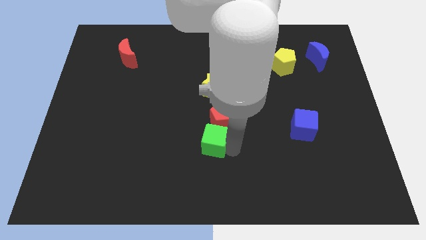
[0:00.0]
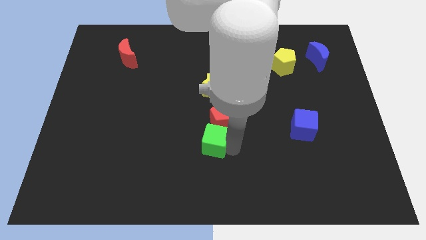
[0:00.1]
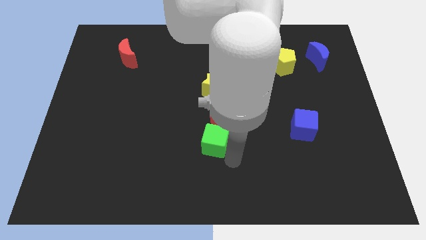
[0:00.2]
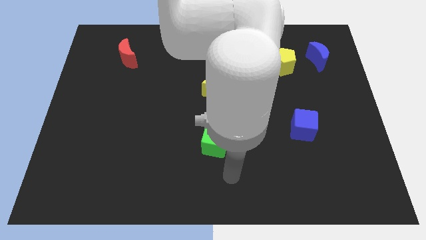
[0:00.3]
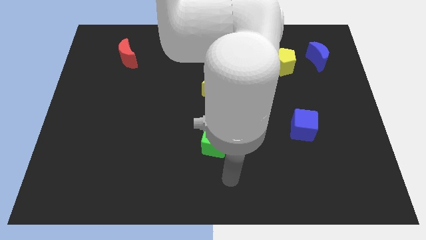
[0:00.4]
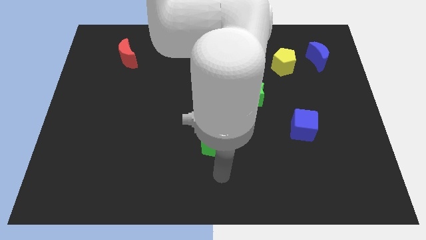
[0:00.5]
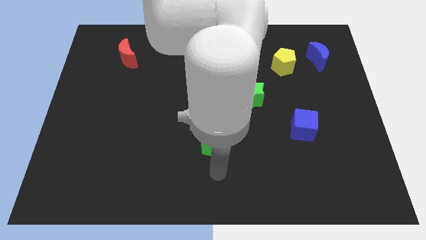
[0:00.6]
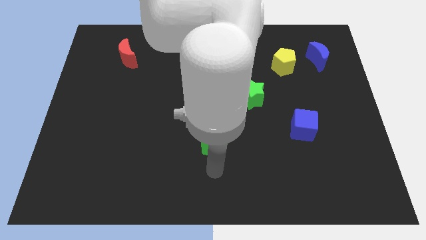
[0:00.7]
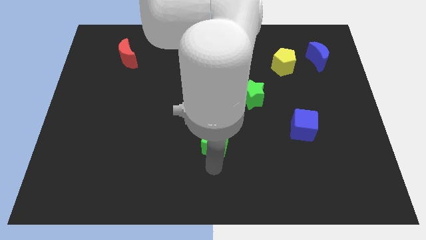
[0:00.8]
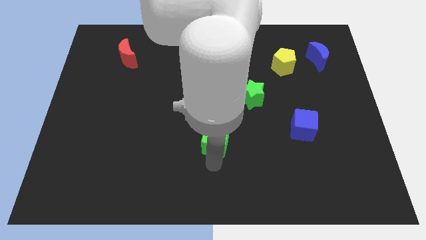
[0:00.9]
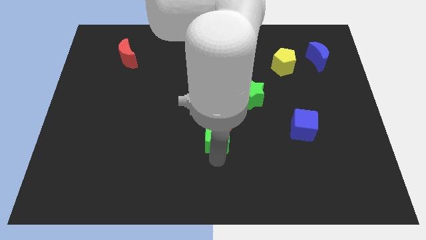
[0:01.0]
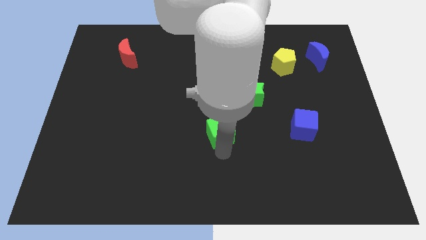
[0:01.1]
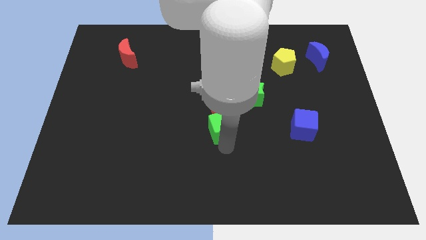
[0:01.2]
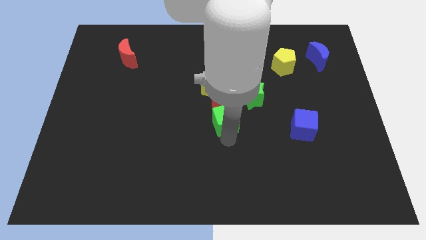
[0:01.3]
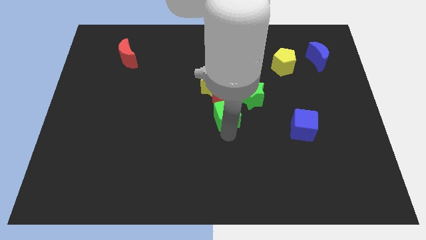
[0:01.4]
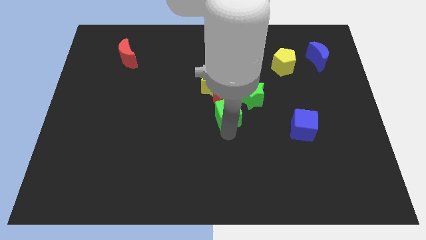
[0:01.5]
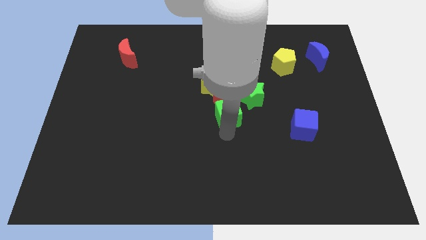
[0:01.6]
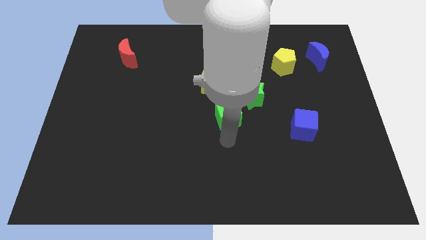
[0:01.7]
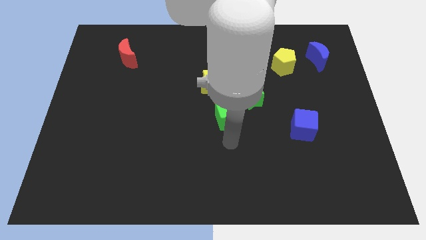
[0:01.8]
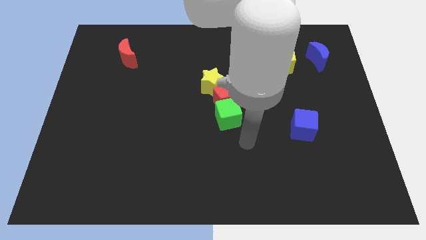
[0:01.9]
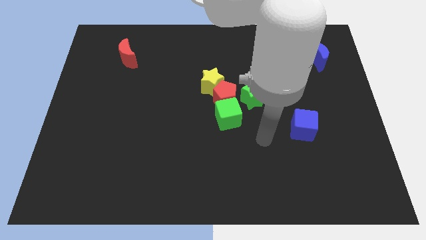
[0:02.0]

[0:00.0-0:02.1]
place green cube to the center of the board

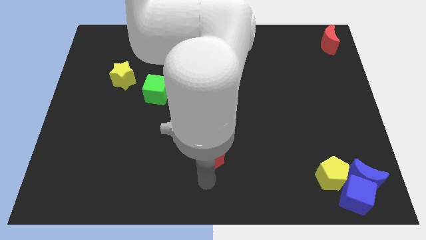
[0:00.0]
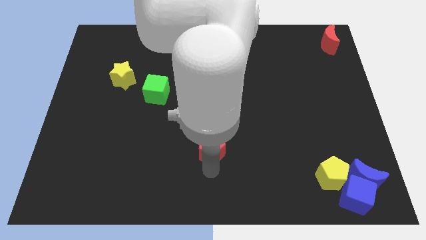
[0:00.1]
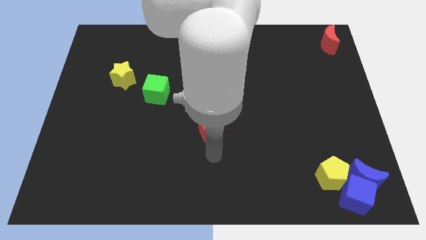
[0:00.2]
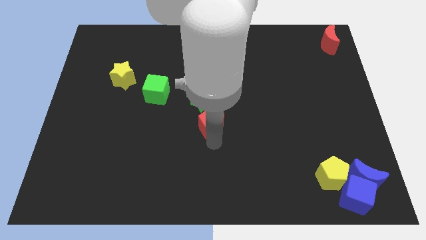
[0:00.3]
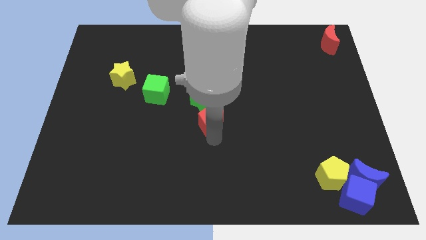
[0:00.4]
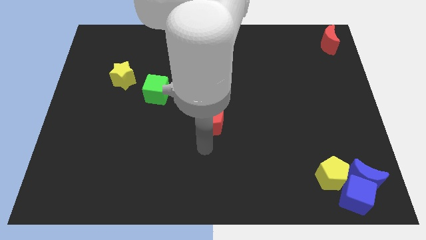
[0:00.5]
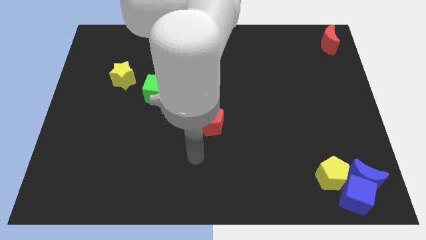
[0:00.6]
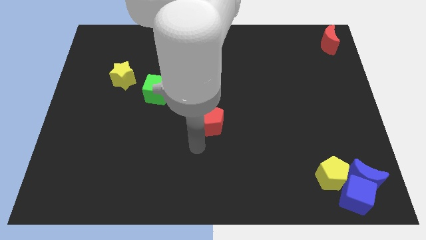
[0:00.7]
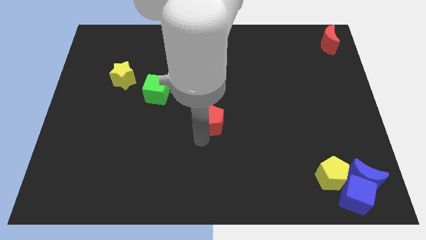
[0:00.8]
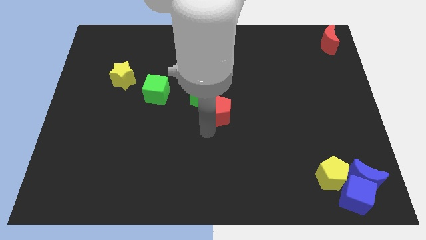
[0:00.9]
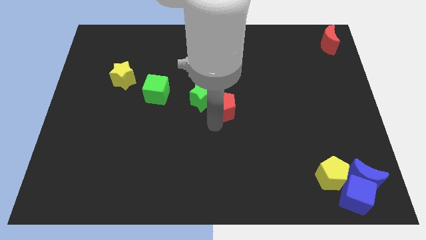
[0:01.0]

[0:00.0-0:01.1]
move the red pentagon into the green star

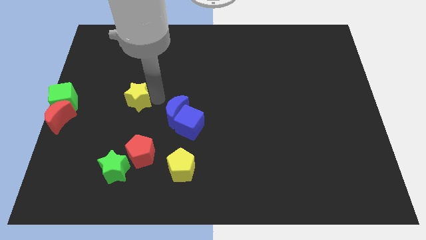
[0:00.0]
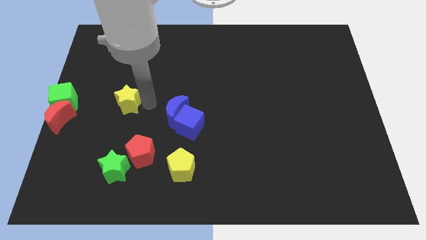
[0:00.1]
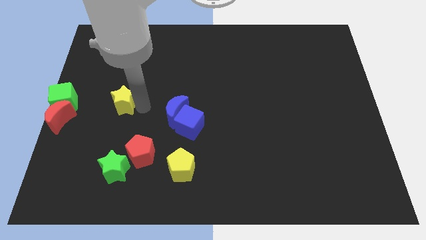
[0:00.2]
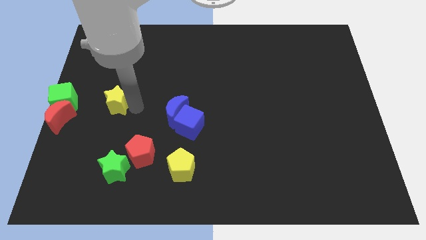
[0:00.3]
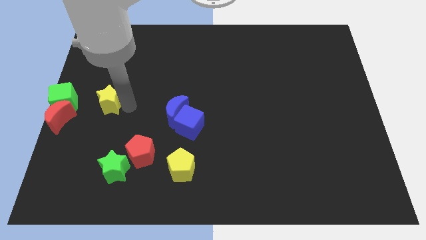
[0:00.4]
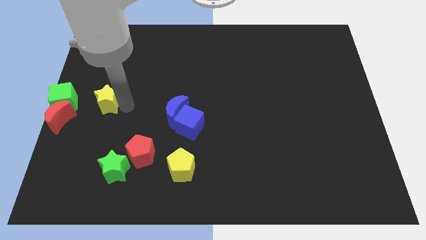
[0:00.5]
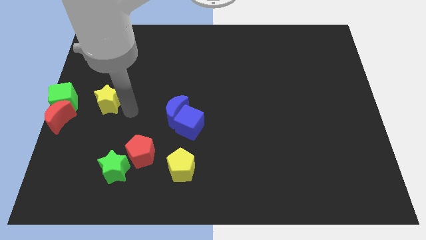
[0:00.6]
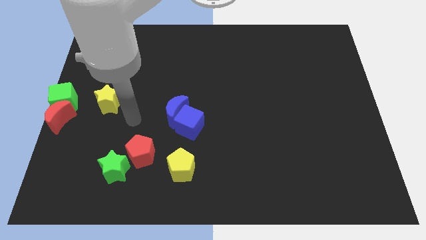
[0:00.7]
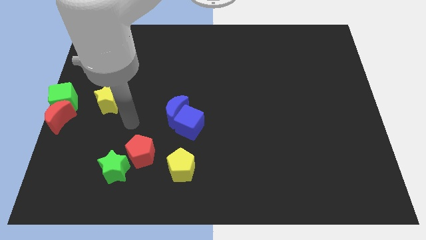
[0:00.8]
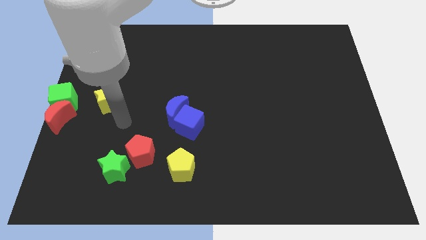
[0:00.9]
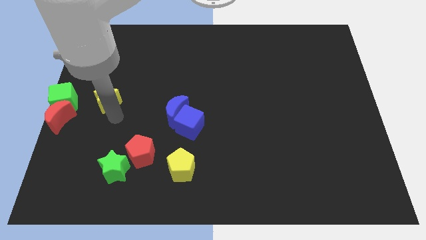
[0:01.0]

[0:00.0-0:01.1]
place the yellow star to the right of the green cube

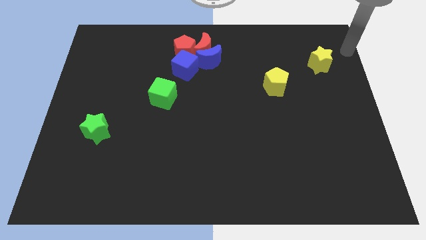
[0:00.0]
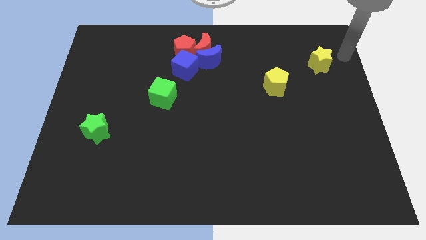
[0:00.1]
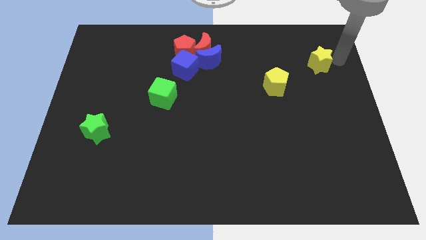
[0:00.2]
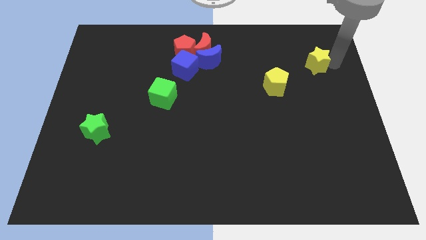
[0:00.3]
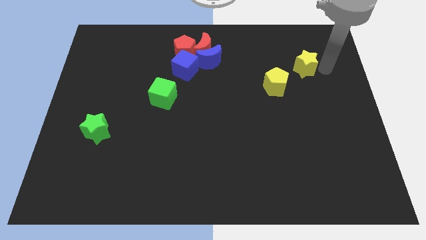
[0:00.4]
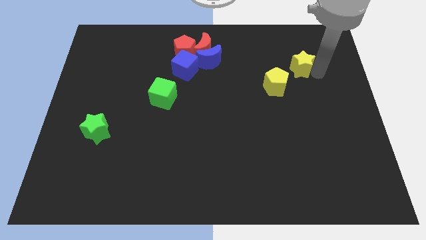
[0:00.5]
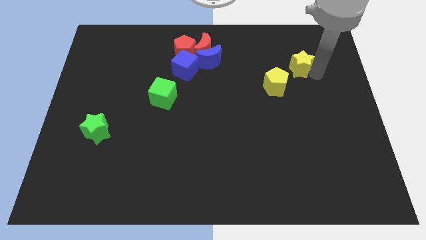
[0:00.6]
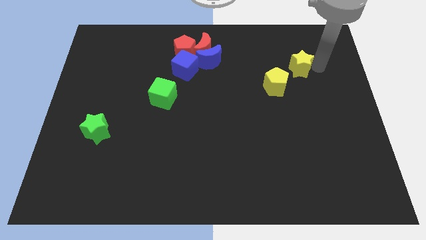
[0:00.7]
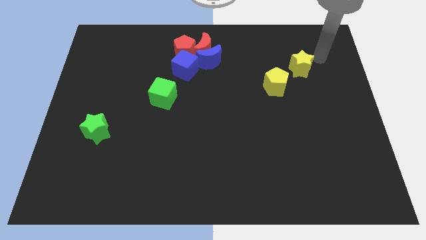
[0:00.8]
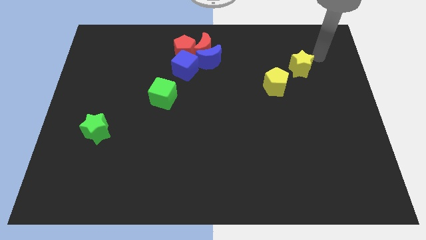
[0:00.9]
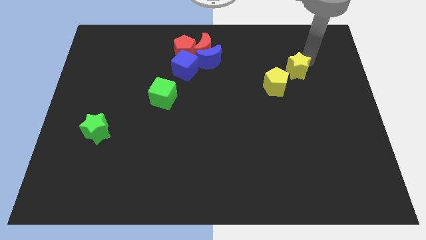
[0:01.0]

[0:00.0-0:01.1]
move the yellow star near to the yellow pentagon

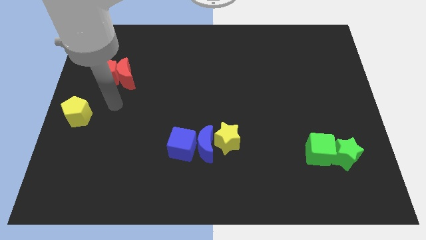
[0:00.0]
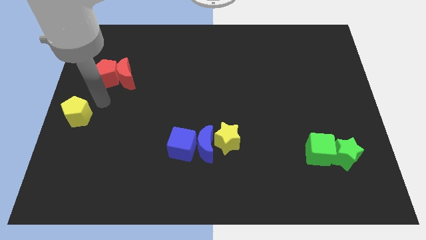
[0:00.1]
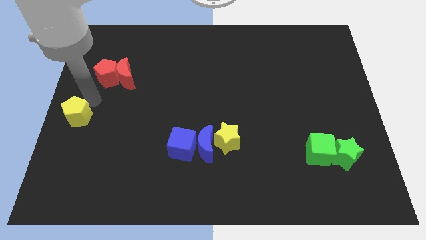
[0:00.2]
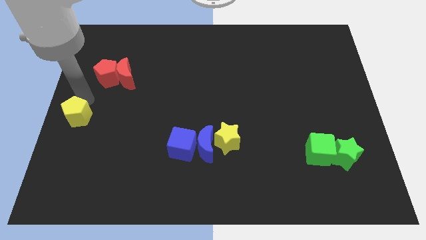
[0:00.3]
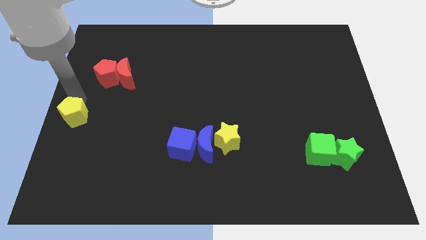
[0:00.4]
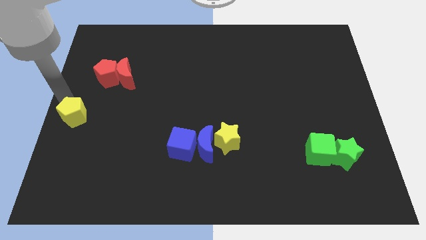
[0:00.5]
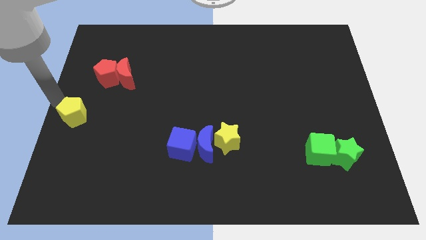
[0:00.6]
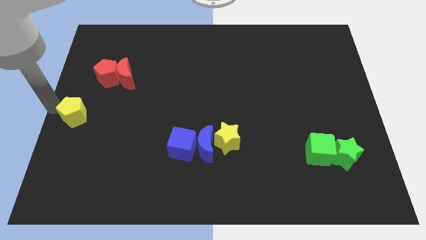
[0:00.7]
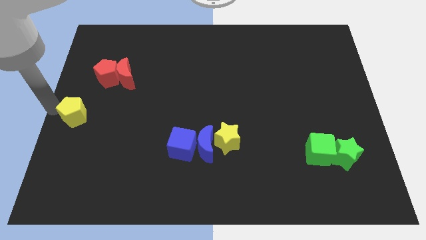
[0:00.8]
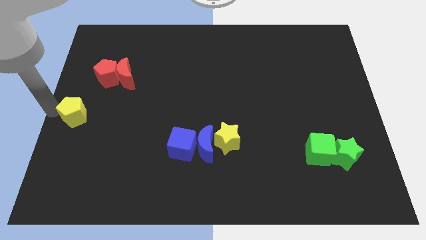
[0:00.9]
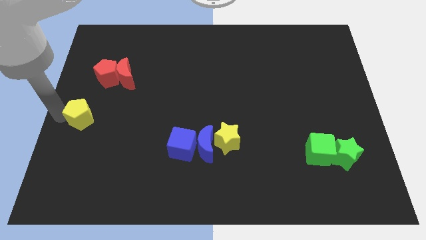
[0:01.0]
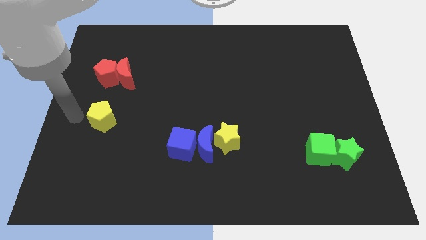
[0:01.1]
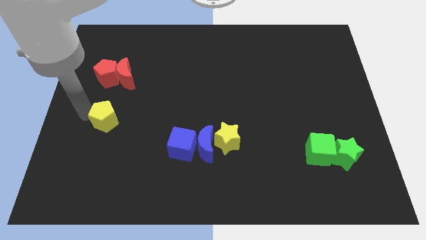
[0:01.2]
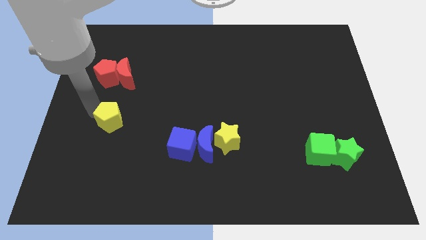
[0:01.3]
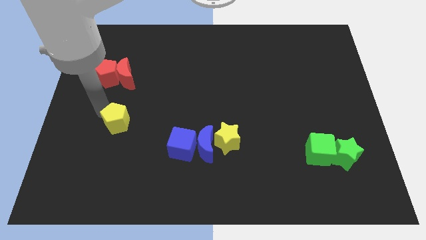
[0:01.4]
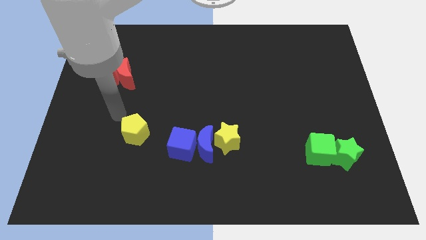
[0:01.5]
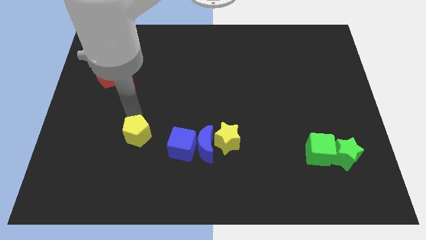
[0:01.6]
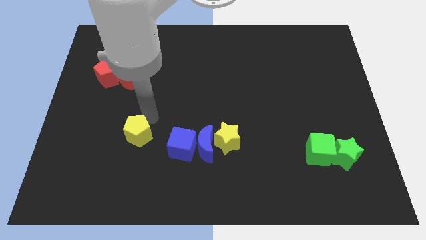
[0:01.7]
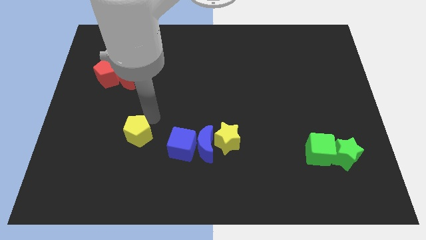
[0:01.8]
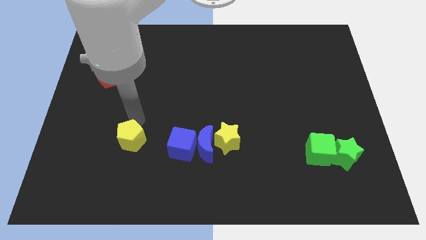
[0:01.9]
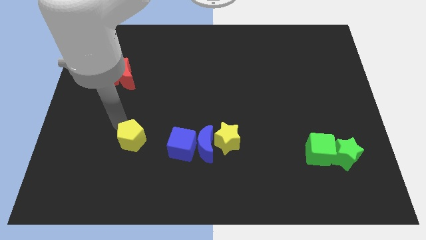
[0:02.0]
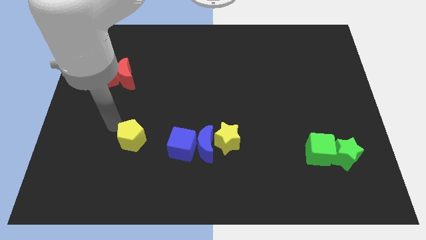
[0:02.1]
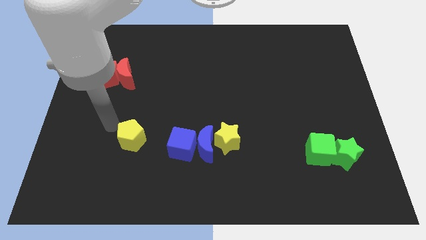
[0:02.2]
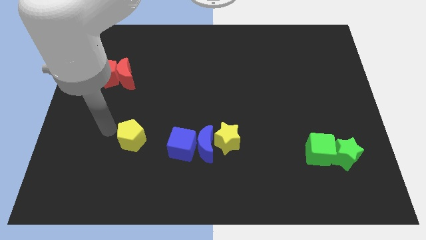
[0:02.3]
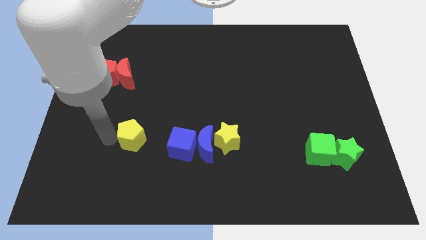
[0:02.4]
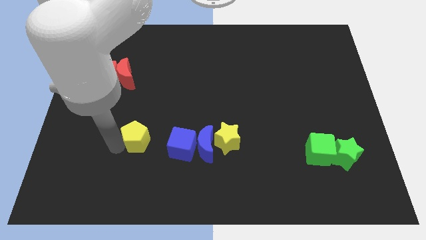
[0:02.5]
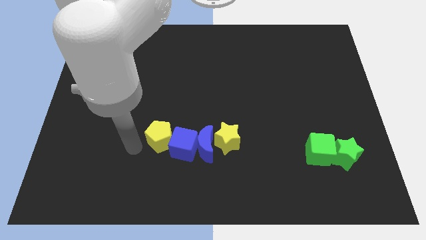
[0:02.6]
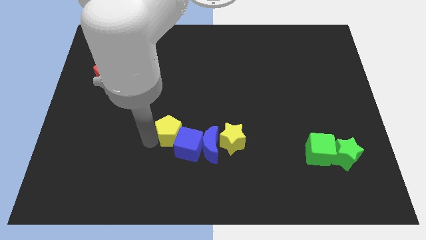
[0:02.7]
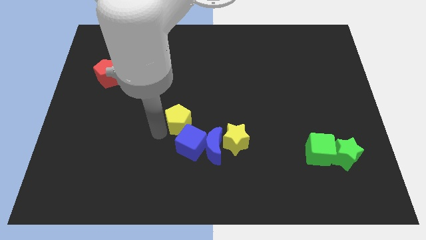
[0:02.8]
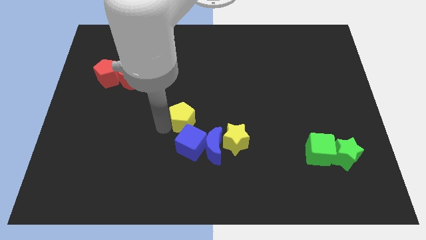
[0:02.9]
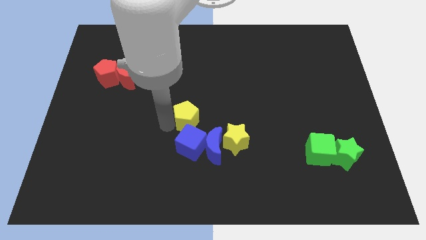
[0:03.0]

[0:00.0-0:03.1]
place the yellow pentagon to the top of blue cube

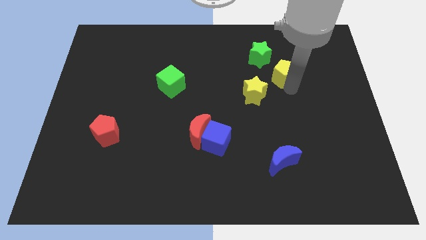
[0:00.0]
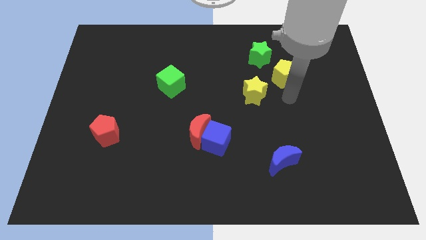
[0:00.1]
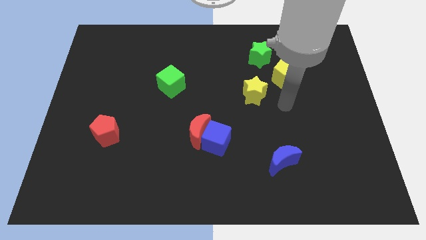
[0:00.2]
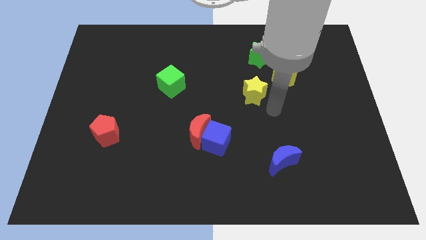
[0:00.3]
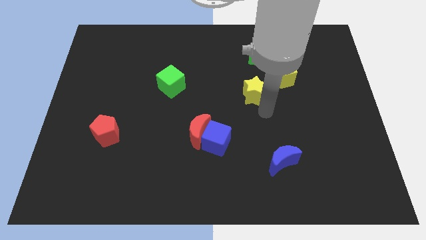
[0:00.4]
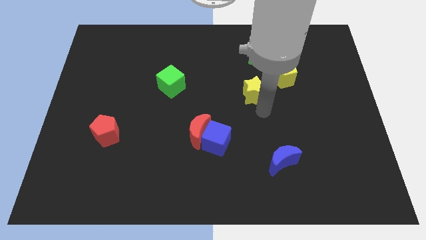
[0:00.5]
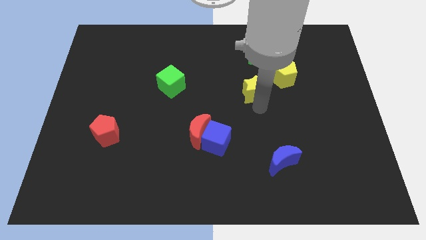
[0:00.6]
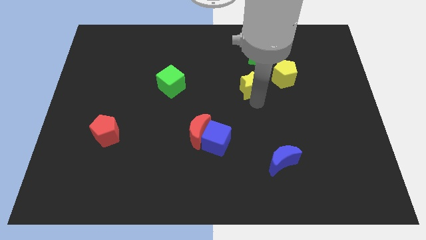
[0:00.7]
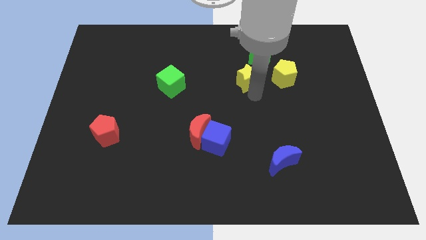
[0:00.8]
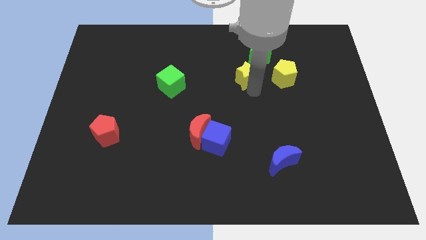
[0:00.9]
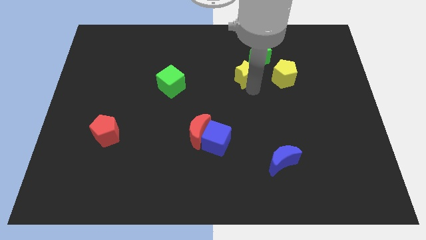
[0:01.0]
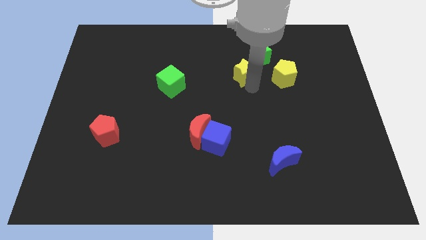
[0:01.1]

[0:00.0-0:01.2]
put the yellow star left to the yellow pentagon
